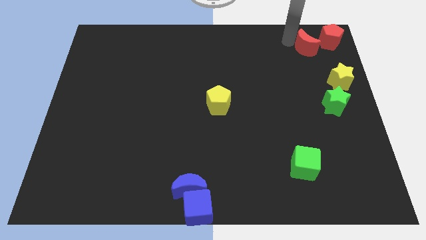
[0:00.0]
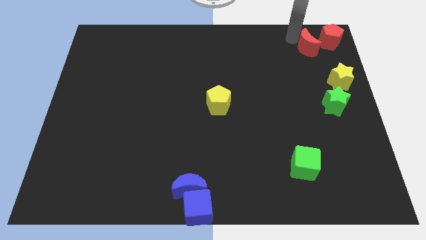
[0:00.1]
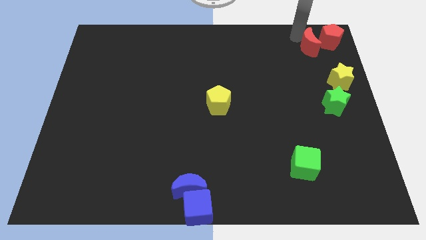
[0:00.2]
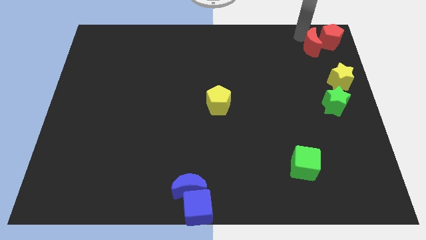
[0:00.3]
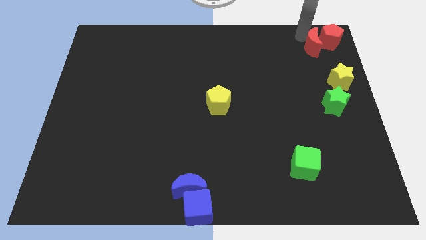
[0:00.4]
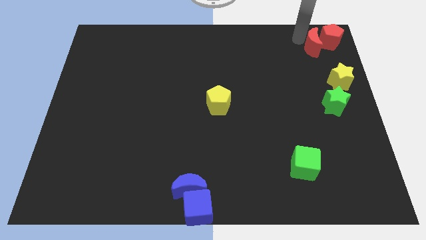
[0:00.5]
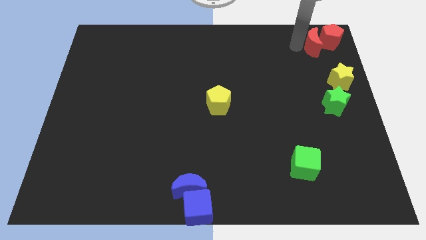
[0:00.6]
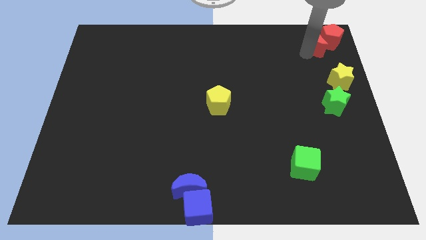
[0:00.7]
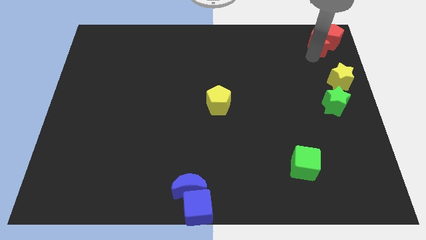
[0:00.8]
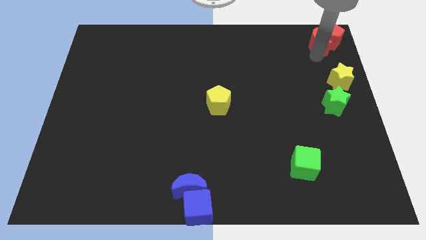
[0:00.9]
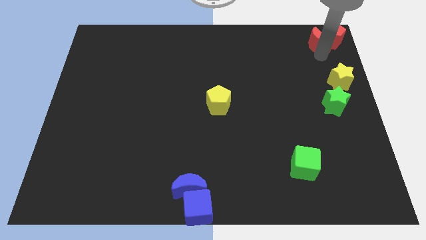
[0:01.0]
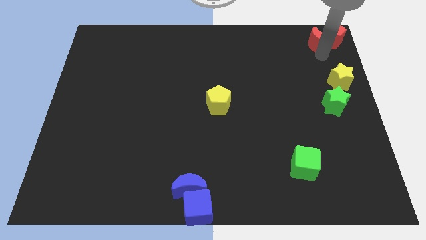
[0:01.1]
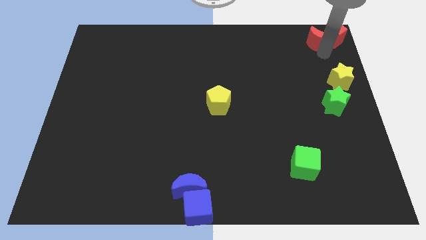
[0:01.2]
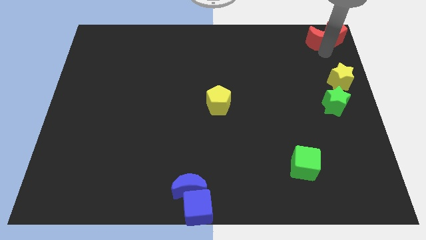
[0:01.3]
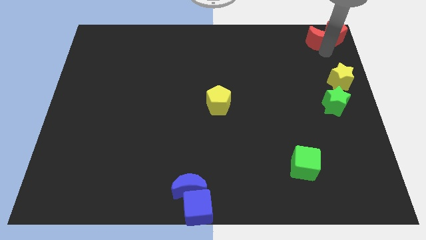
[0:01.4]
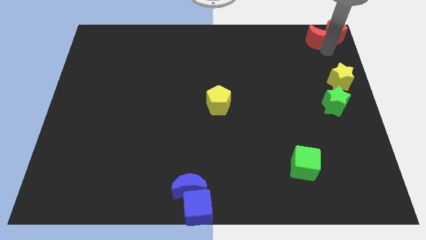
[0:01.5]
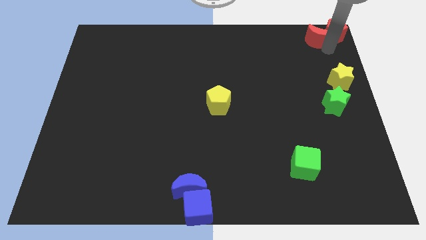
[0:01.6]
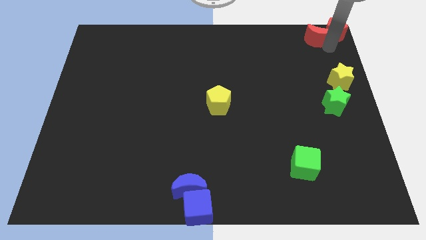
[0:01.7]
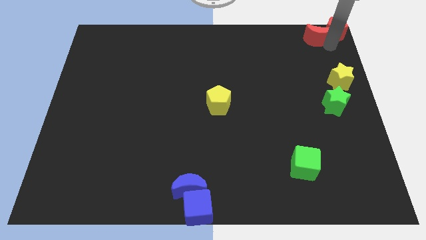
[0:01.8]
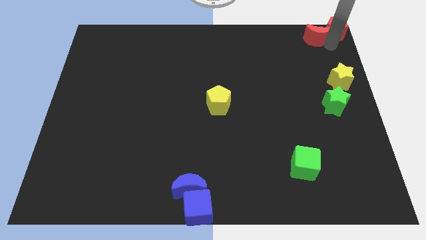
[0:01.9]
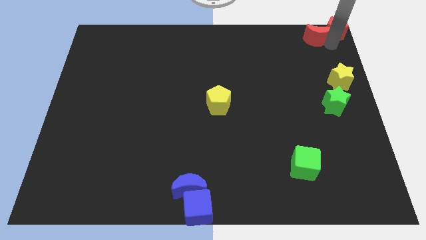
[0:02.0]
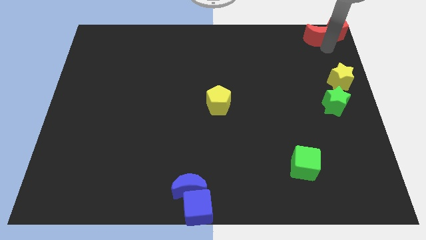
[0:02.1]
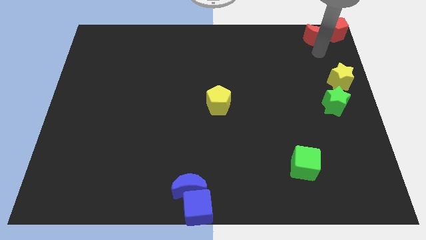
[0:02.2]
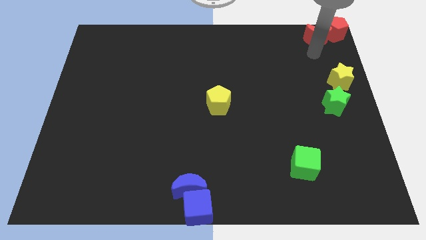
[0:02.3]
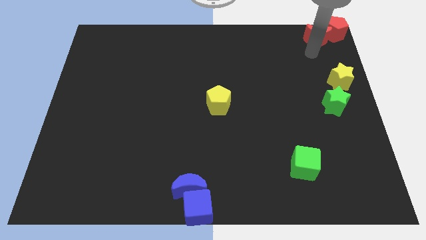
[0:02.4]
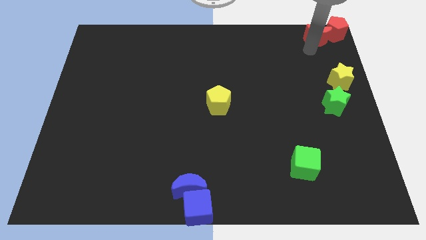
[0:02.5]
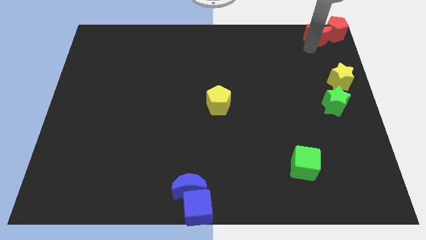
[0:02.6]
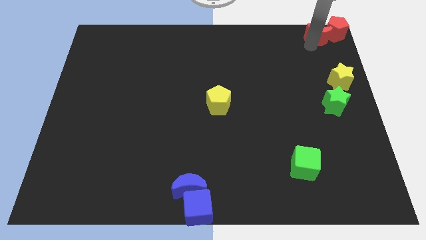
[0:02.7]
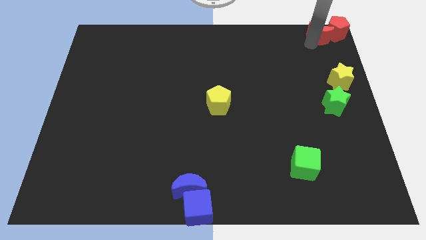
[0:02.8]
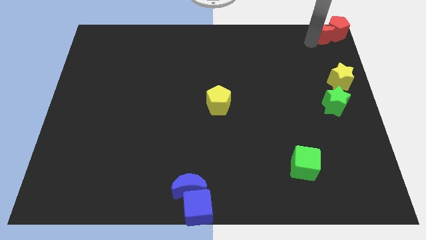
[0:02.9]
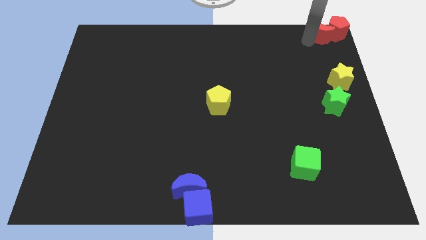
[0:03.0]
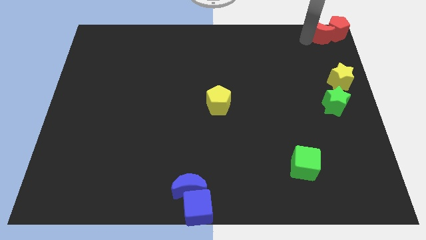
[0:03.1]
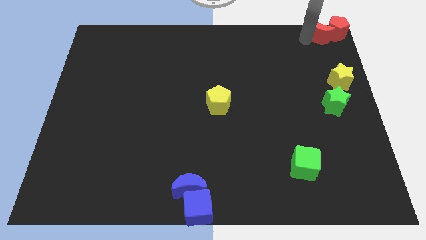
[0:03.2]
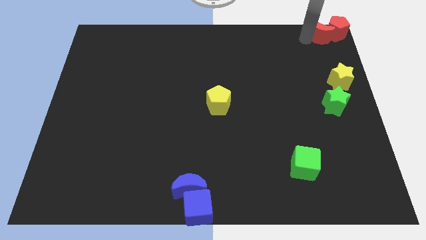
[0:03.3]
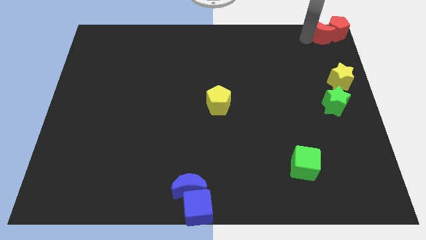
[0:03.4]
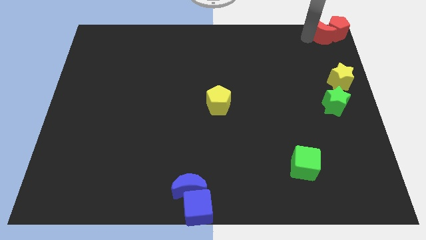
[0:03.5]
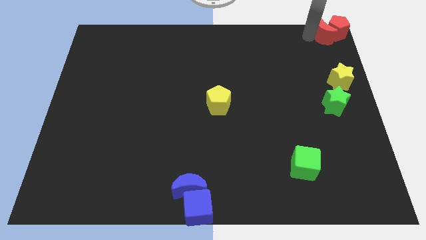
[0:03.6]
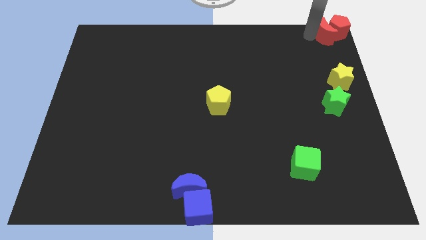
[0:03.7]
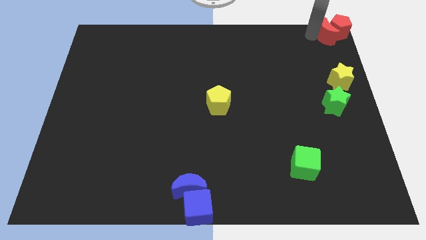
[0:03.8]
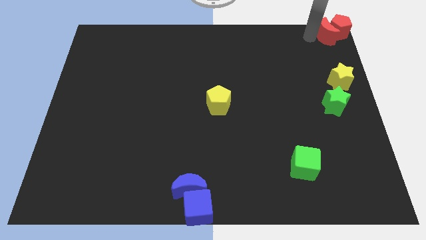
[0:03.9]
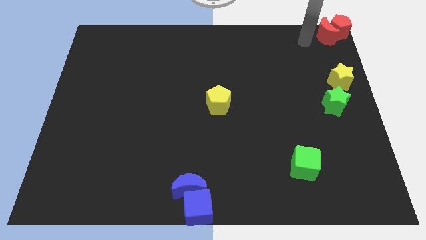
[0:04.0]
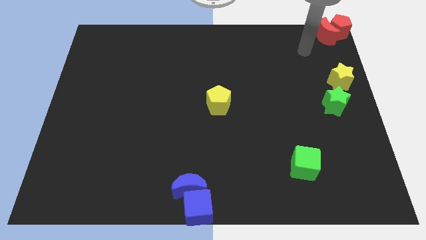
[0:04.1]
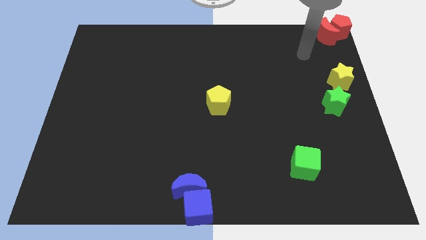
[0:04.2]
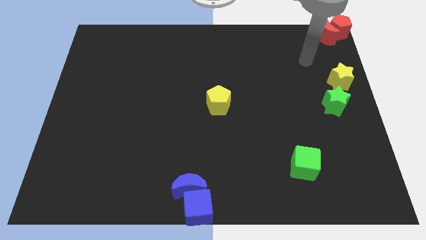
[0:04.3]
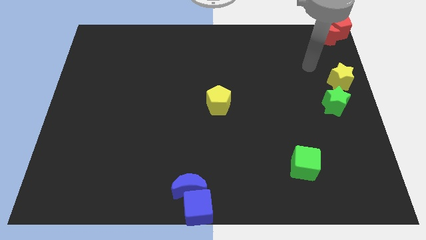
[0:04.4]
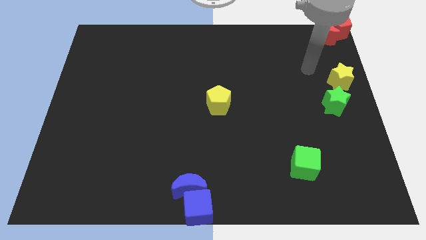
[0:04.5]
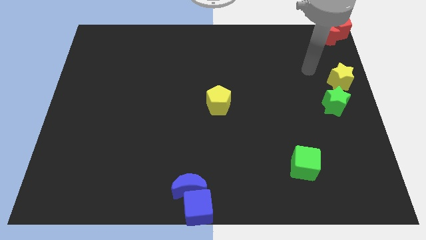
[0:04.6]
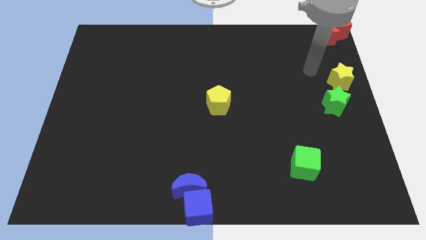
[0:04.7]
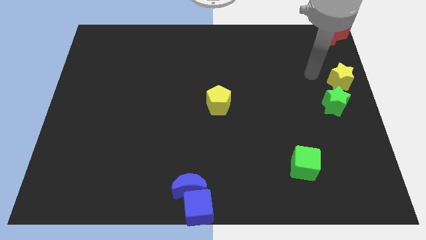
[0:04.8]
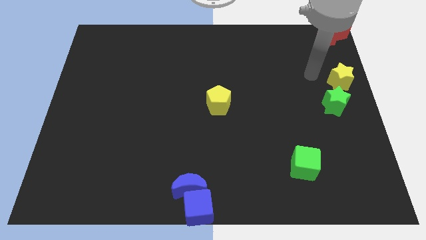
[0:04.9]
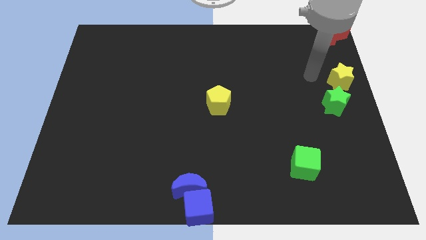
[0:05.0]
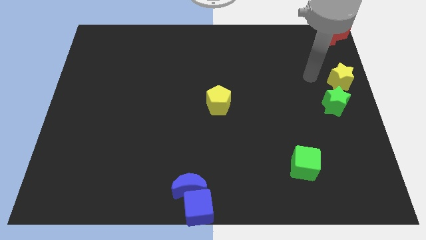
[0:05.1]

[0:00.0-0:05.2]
push the red pentagon with red crescent towards the top right of the board

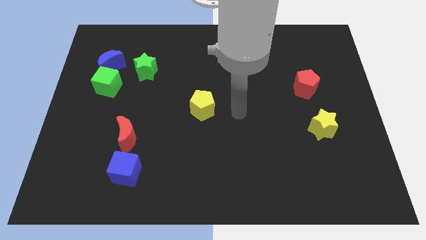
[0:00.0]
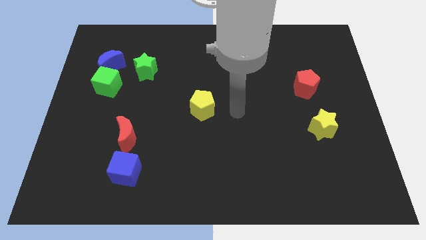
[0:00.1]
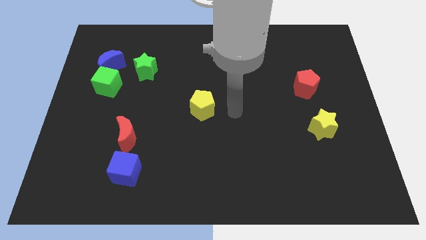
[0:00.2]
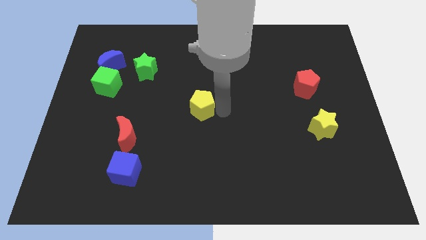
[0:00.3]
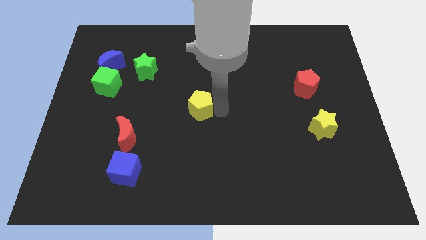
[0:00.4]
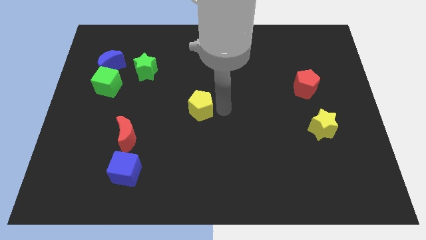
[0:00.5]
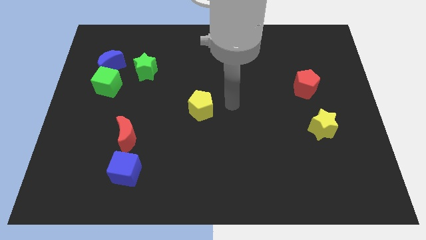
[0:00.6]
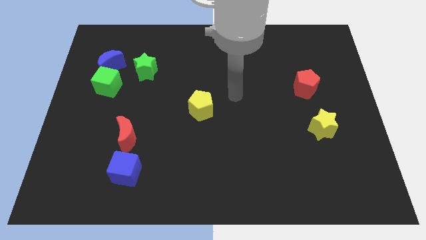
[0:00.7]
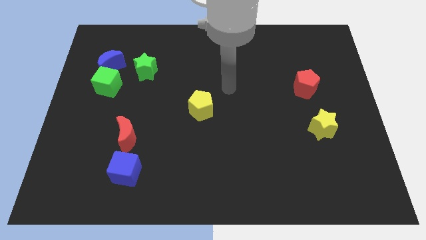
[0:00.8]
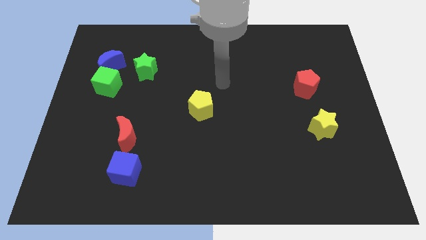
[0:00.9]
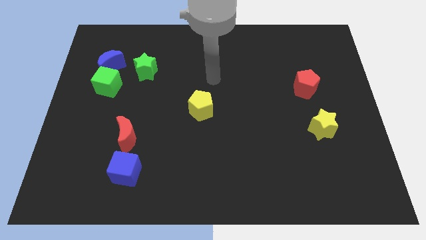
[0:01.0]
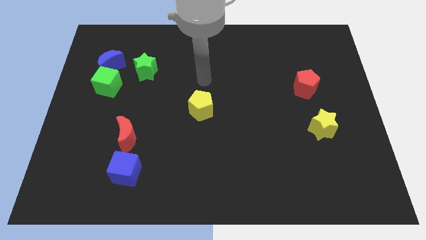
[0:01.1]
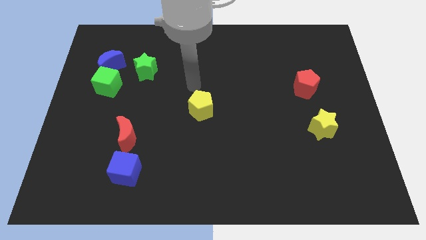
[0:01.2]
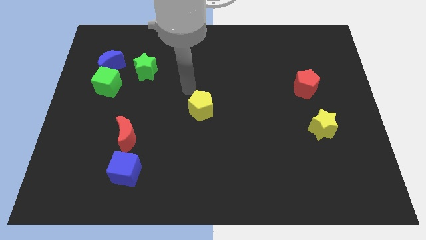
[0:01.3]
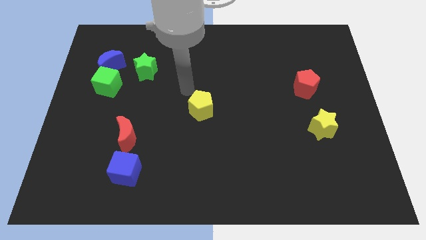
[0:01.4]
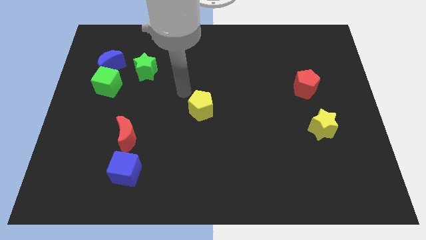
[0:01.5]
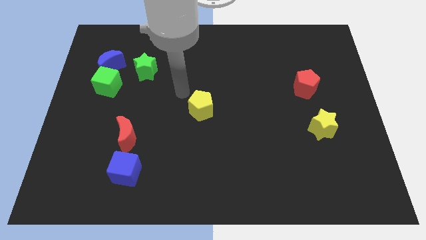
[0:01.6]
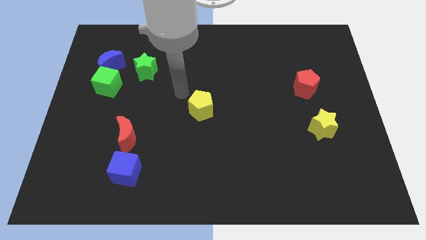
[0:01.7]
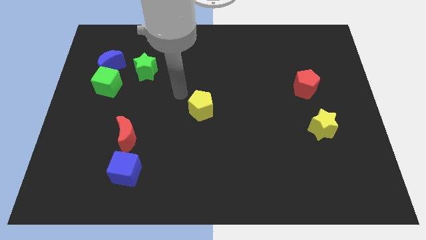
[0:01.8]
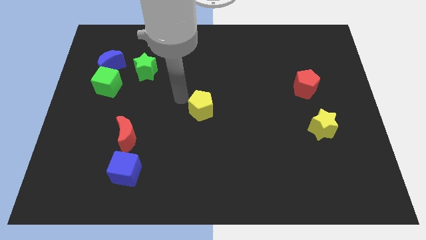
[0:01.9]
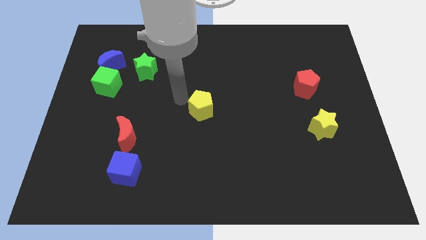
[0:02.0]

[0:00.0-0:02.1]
slightly touch right to the yellow pentagon

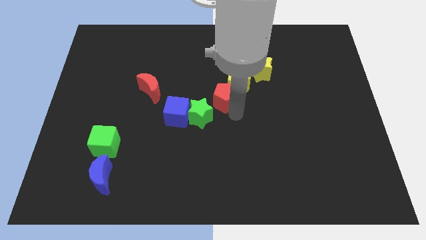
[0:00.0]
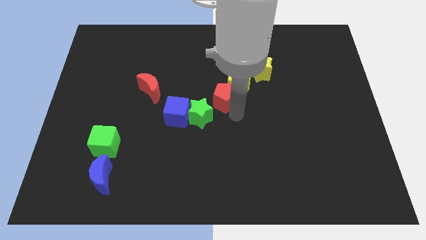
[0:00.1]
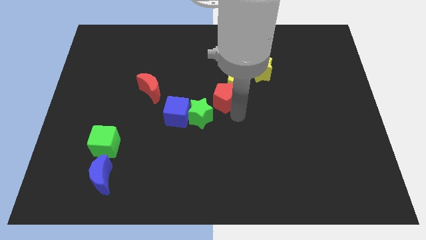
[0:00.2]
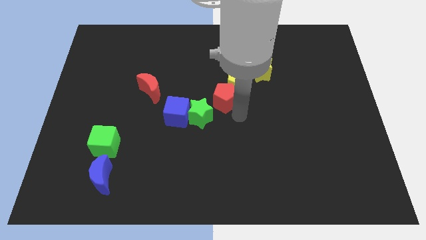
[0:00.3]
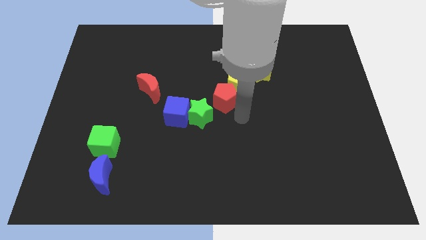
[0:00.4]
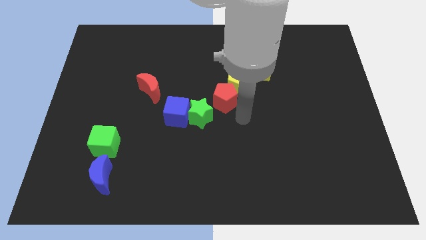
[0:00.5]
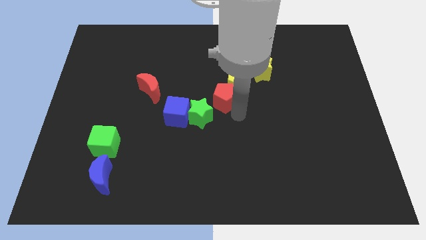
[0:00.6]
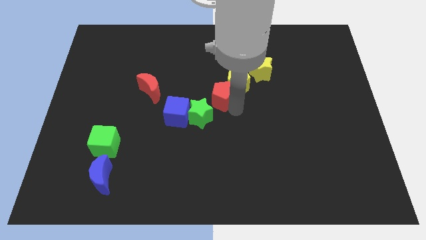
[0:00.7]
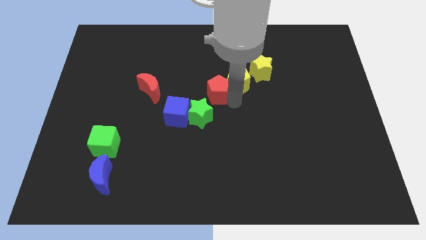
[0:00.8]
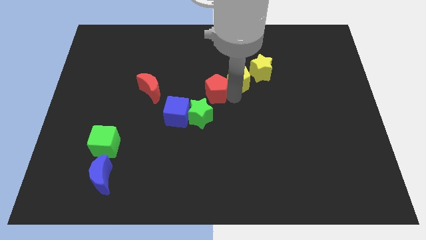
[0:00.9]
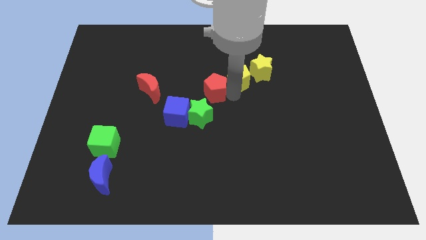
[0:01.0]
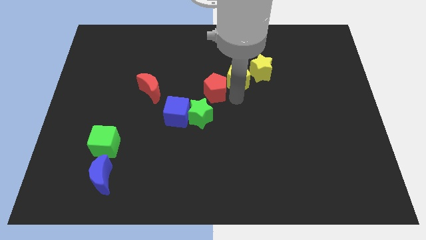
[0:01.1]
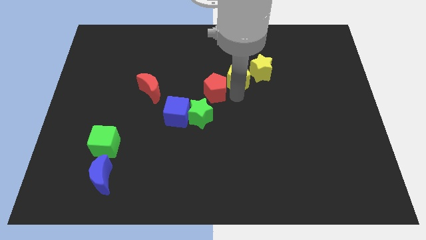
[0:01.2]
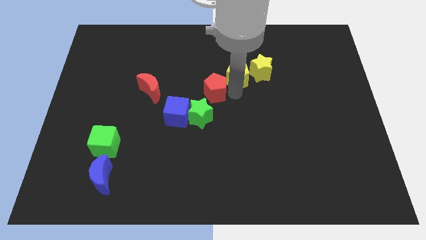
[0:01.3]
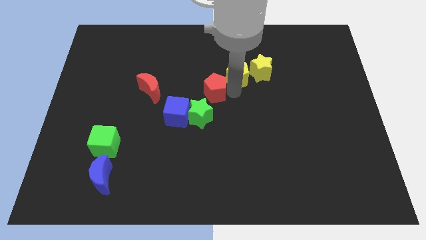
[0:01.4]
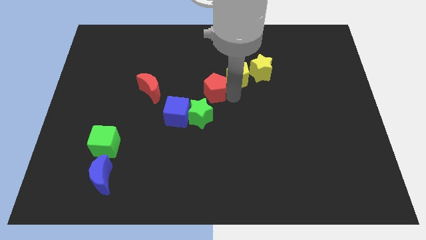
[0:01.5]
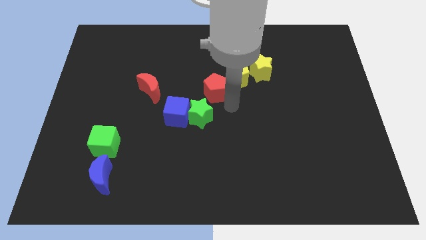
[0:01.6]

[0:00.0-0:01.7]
slightly push the red pentagon and yellow pentagon to the top of the board

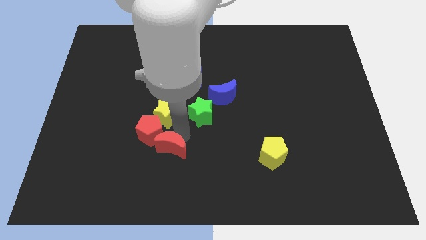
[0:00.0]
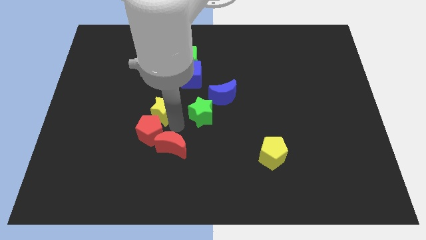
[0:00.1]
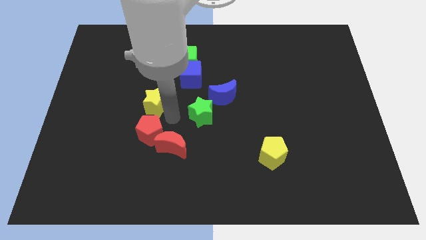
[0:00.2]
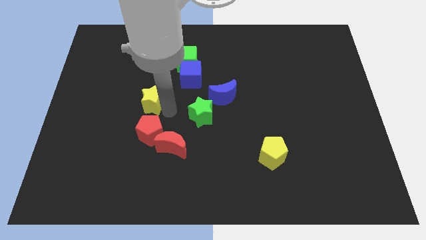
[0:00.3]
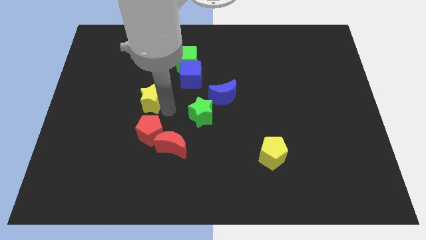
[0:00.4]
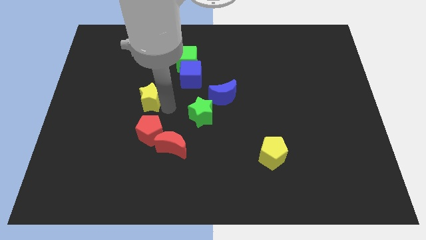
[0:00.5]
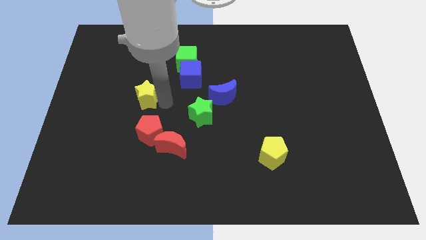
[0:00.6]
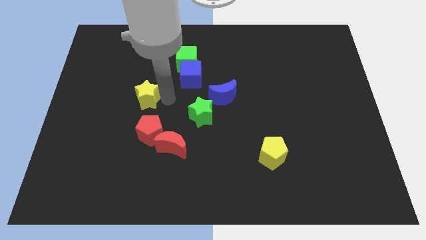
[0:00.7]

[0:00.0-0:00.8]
separate the yellow star from the red blocks
